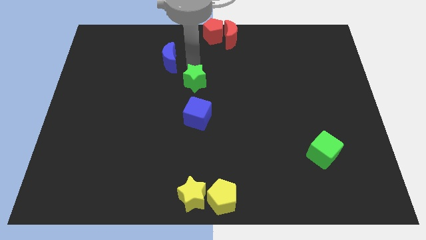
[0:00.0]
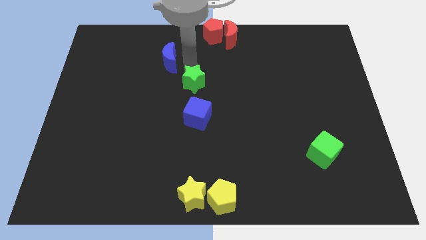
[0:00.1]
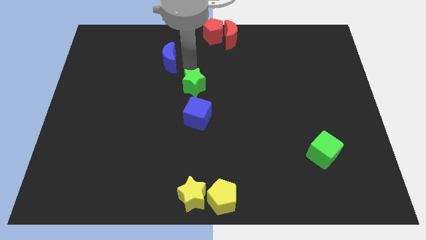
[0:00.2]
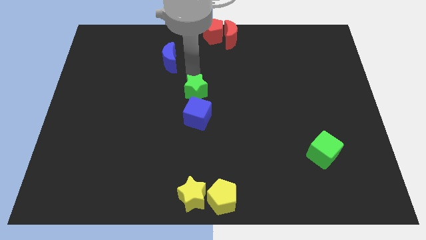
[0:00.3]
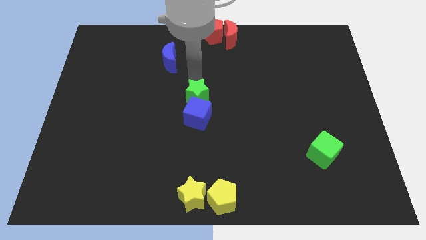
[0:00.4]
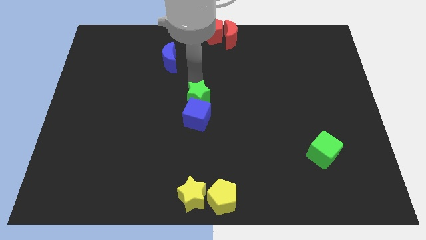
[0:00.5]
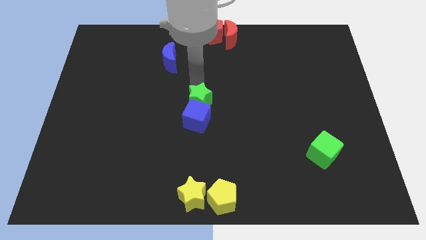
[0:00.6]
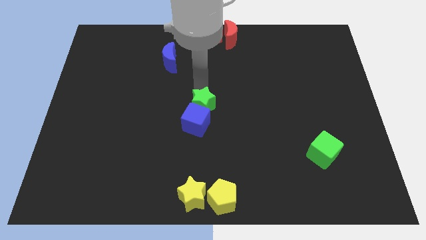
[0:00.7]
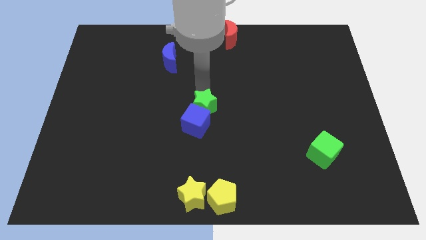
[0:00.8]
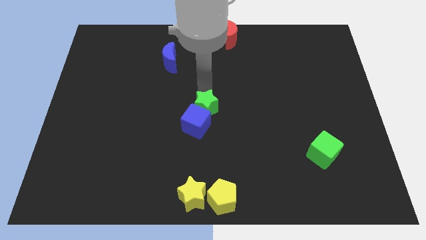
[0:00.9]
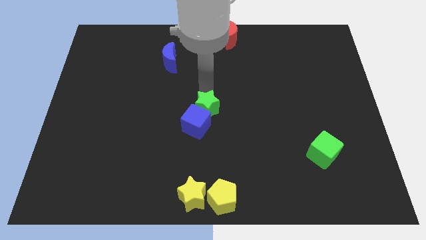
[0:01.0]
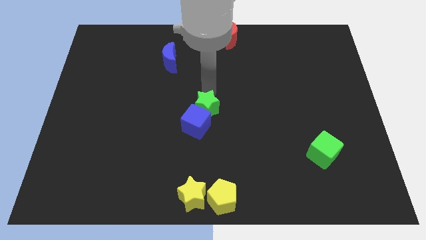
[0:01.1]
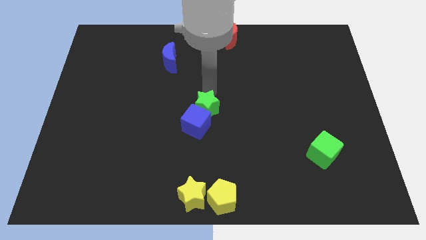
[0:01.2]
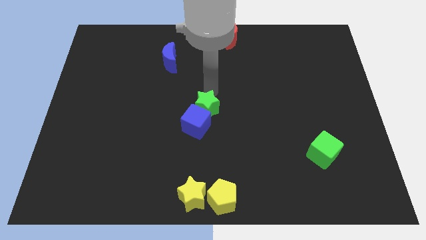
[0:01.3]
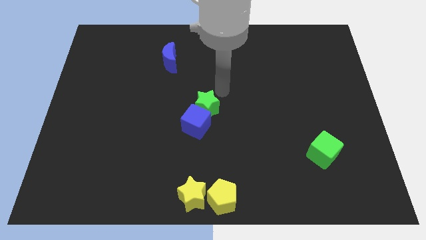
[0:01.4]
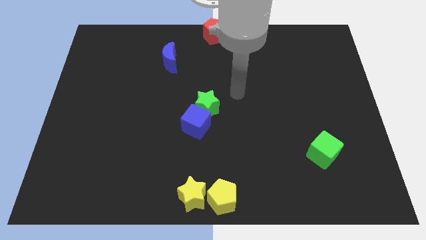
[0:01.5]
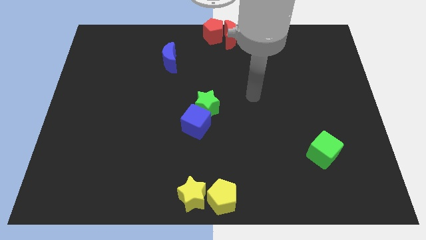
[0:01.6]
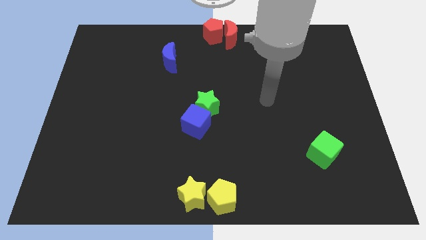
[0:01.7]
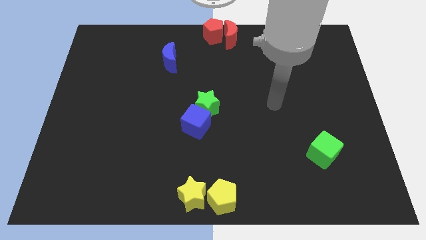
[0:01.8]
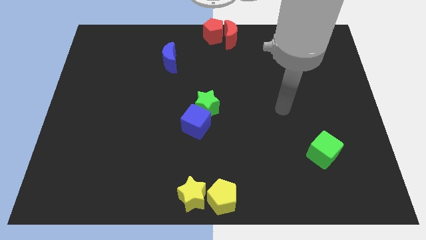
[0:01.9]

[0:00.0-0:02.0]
place the green star towards the center

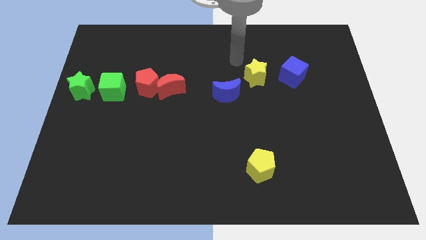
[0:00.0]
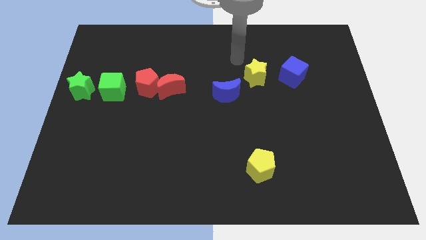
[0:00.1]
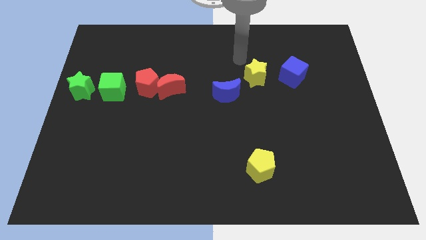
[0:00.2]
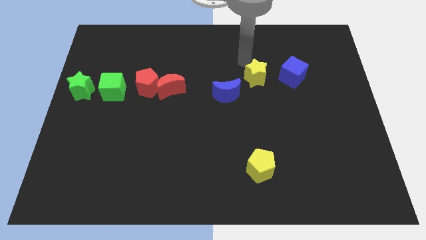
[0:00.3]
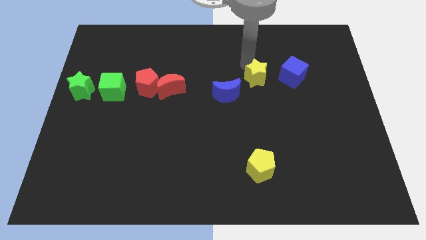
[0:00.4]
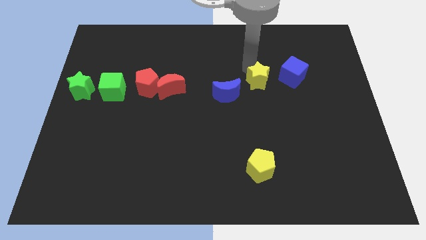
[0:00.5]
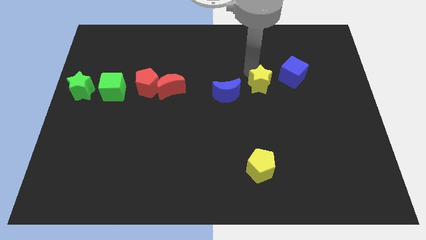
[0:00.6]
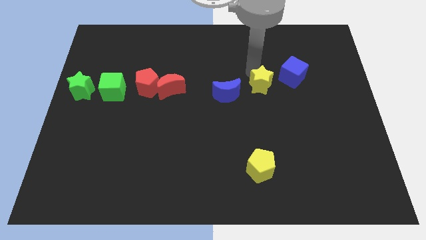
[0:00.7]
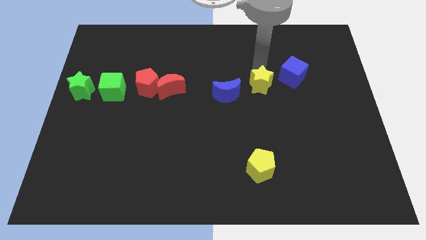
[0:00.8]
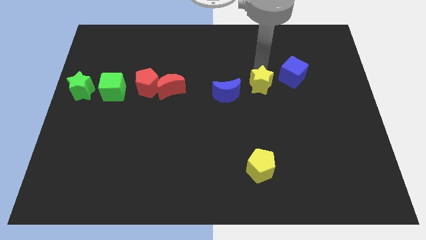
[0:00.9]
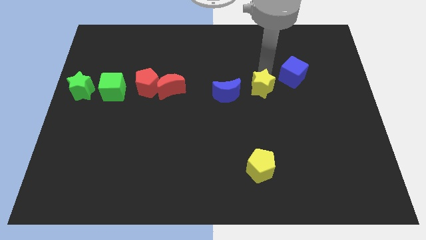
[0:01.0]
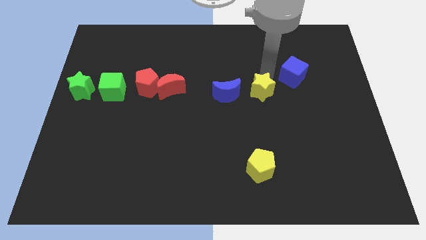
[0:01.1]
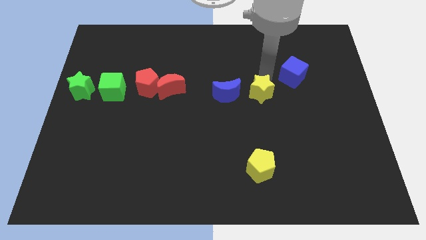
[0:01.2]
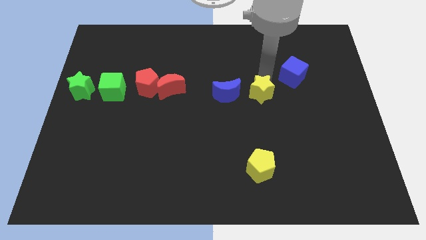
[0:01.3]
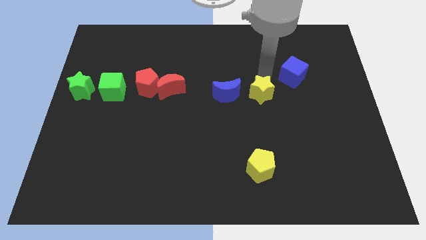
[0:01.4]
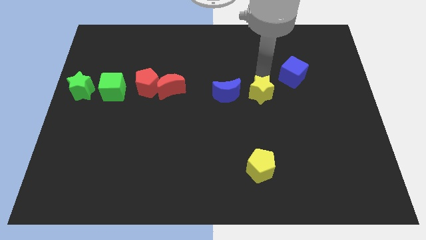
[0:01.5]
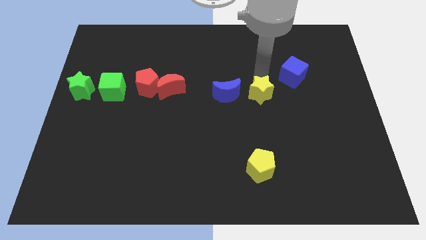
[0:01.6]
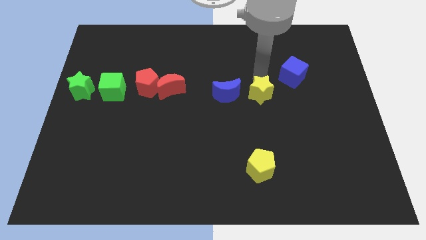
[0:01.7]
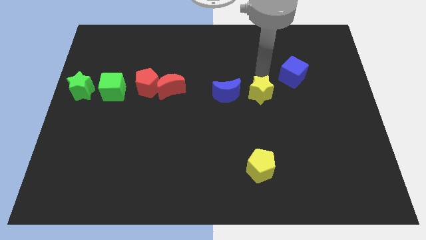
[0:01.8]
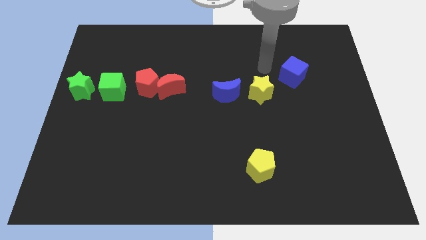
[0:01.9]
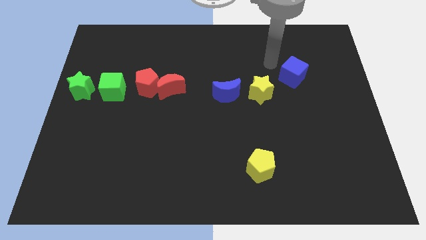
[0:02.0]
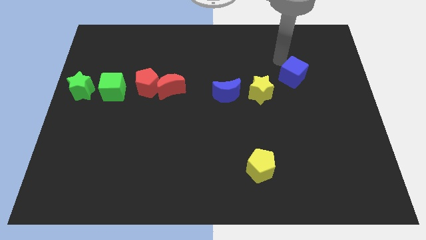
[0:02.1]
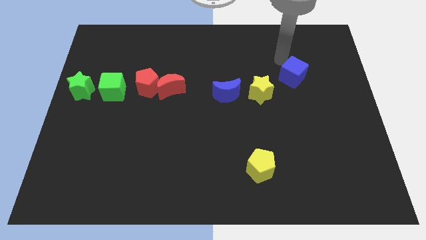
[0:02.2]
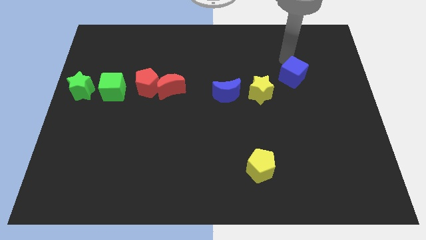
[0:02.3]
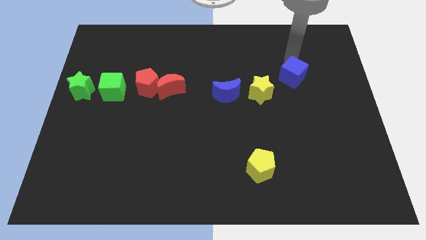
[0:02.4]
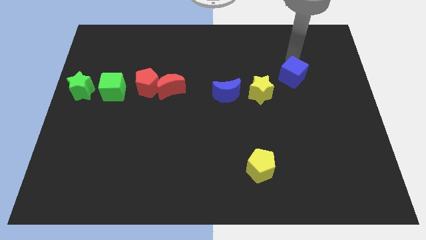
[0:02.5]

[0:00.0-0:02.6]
move the yellow star to the right of the blue crescent

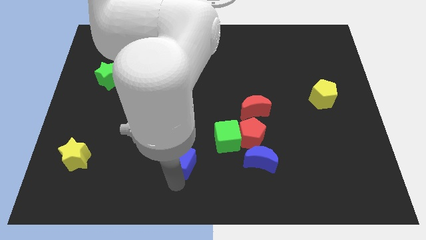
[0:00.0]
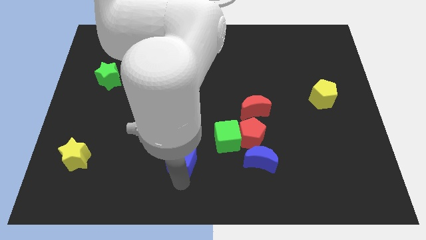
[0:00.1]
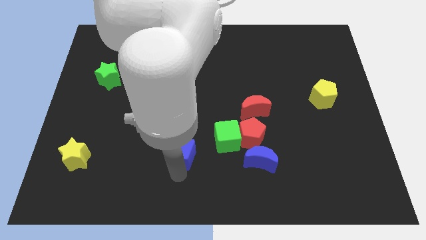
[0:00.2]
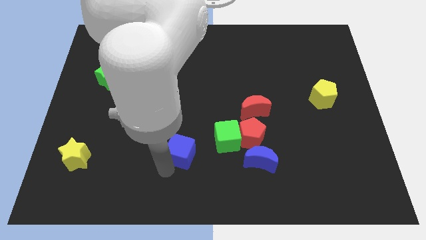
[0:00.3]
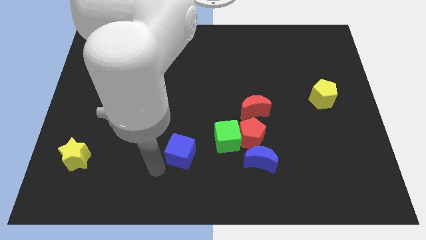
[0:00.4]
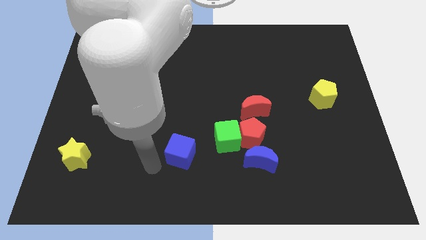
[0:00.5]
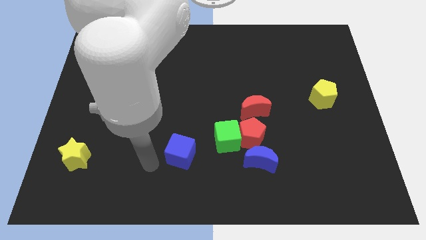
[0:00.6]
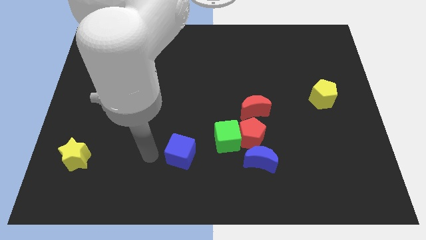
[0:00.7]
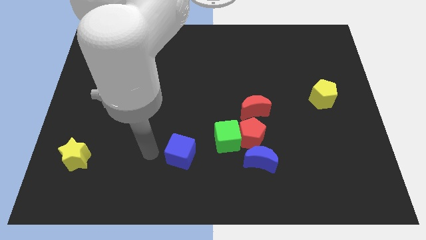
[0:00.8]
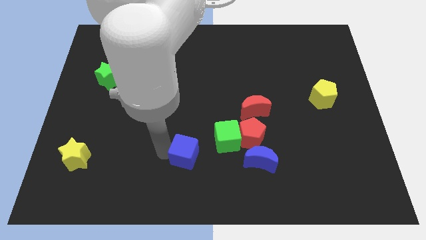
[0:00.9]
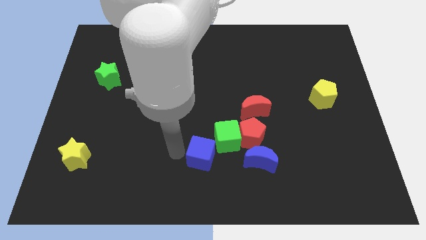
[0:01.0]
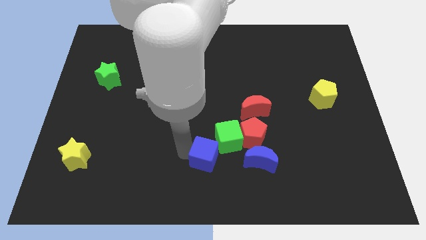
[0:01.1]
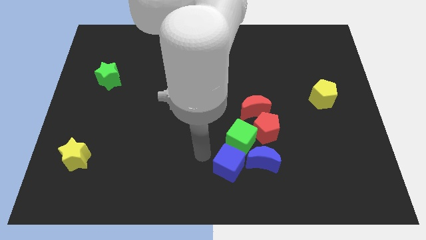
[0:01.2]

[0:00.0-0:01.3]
move the blue cube into the green cube

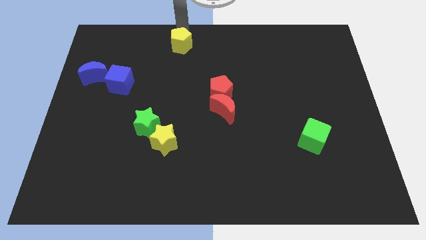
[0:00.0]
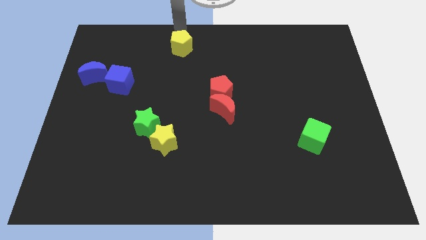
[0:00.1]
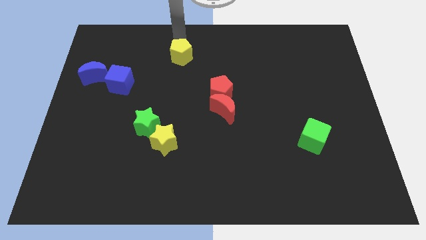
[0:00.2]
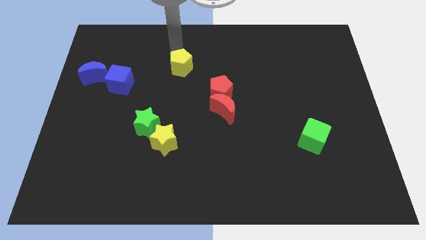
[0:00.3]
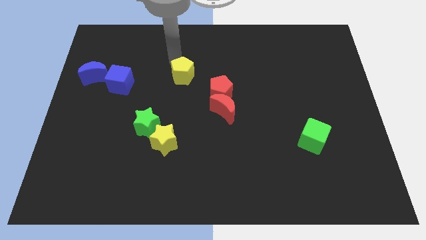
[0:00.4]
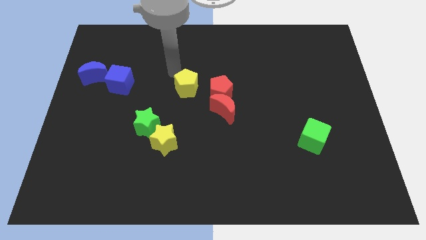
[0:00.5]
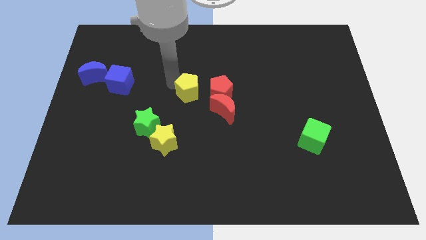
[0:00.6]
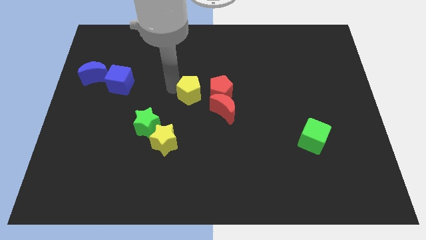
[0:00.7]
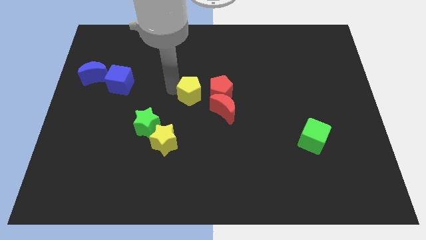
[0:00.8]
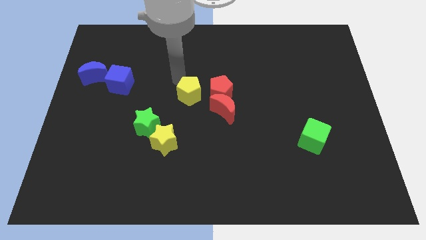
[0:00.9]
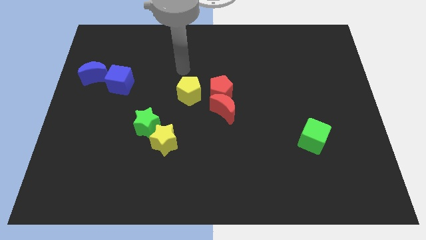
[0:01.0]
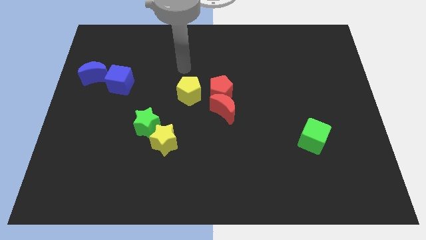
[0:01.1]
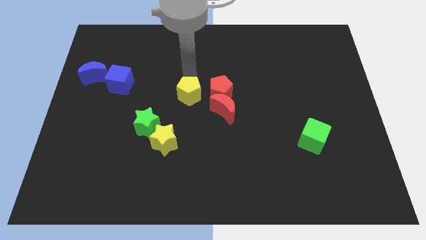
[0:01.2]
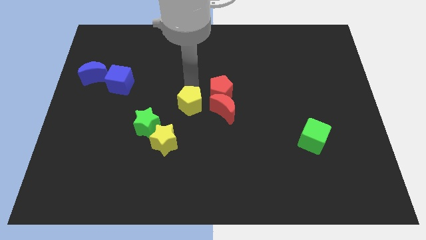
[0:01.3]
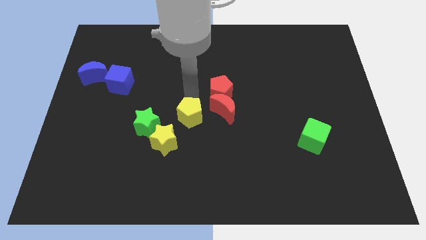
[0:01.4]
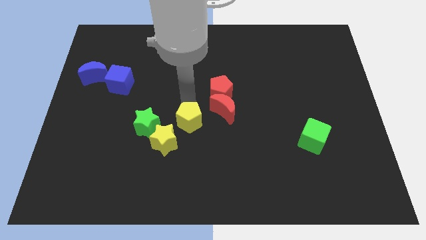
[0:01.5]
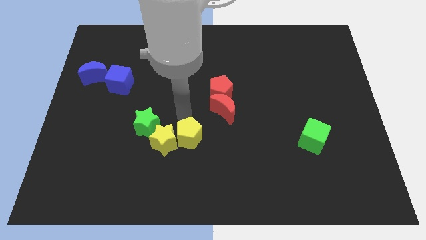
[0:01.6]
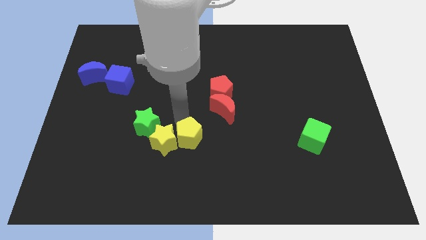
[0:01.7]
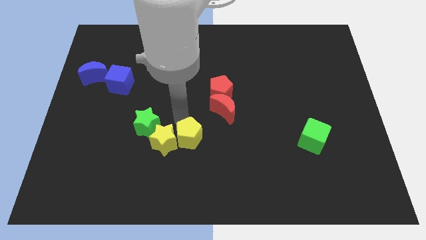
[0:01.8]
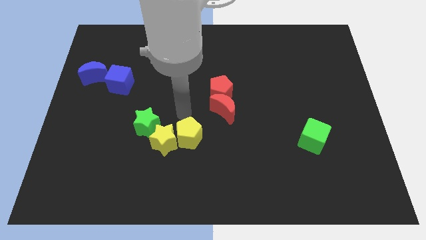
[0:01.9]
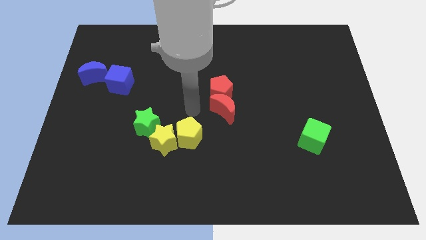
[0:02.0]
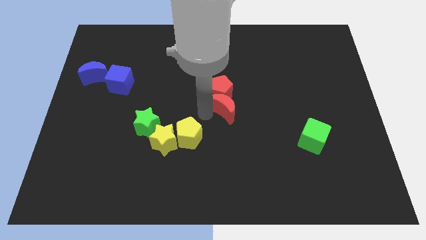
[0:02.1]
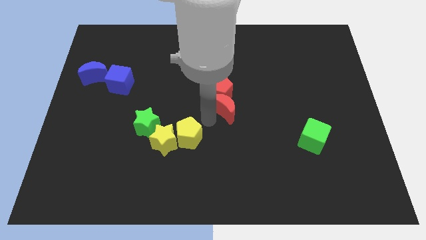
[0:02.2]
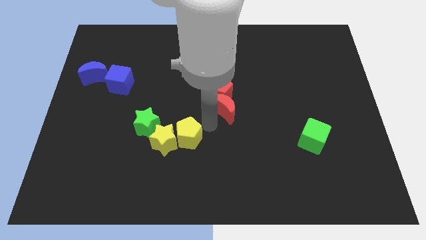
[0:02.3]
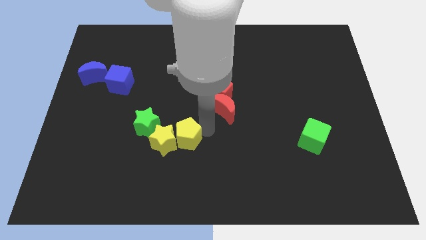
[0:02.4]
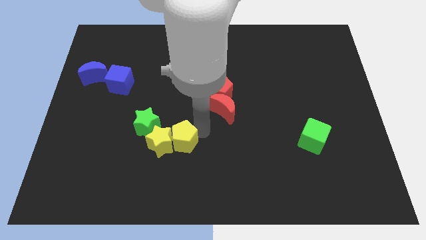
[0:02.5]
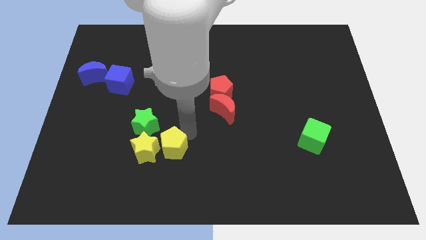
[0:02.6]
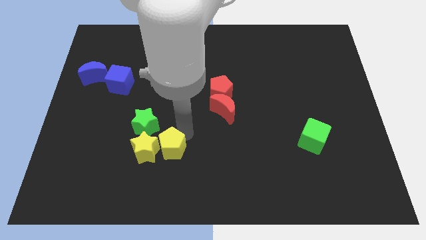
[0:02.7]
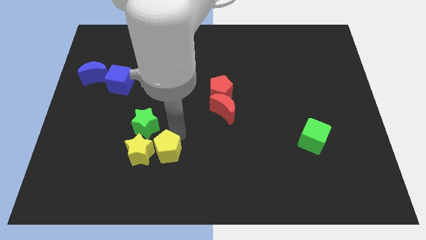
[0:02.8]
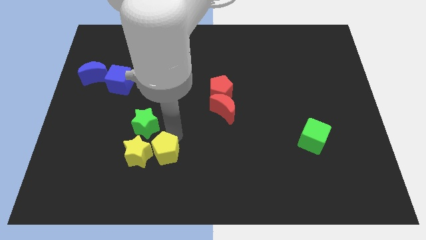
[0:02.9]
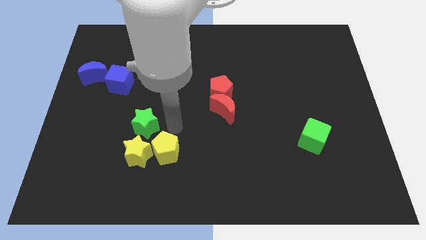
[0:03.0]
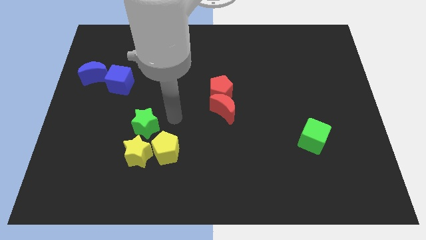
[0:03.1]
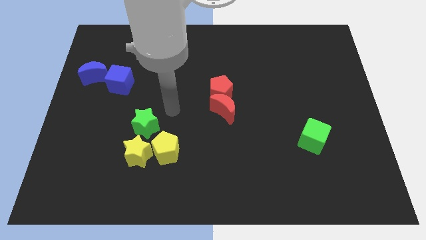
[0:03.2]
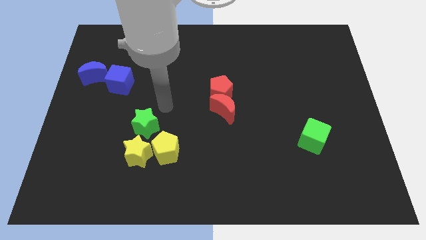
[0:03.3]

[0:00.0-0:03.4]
place both the yellow star and yellow pentagon to the bottom of the green star
